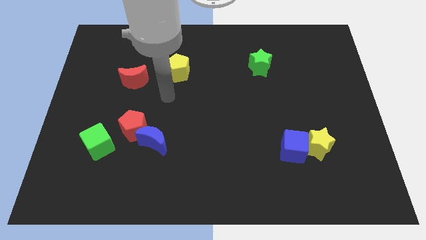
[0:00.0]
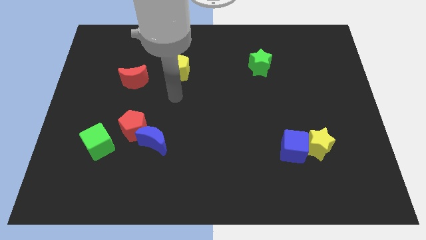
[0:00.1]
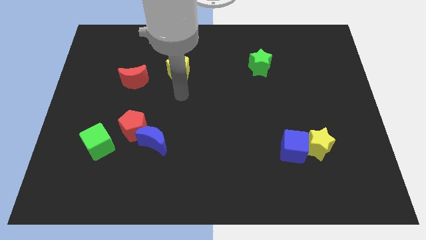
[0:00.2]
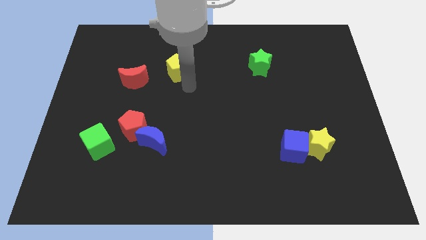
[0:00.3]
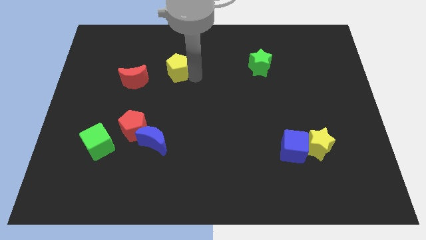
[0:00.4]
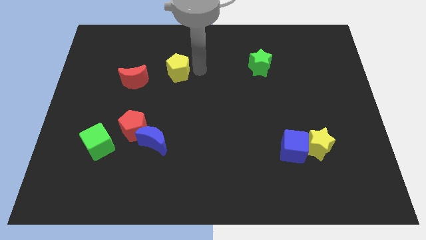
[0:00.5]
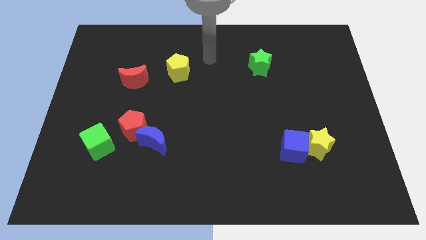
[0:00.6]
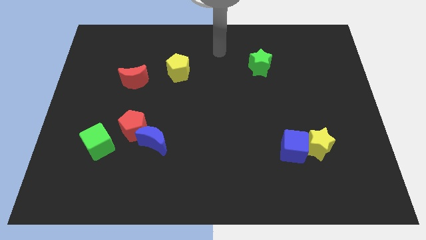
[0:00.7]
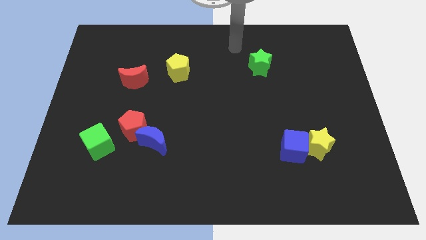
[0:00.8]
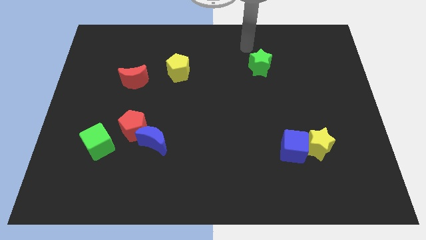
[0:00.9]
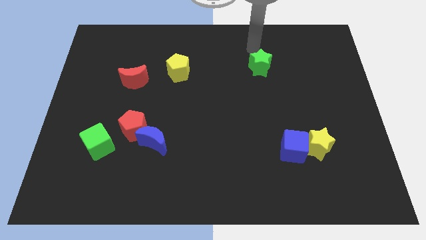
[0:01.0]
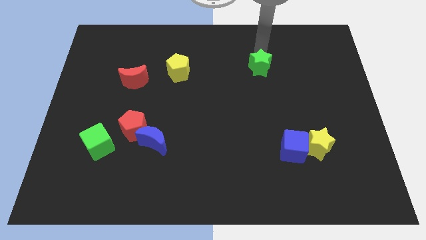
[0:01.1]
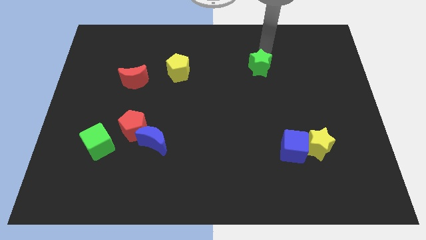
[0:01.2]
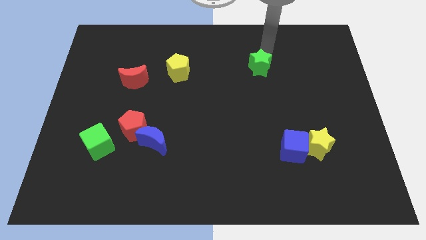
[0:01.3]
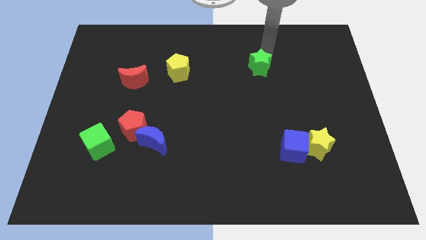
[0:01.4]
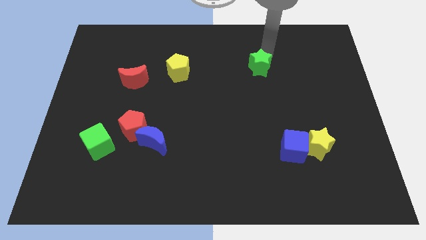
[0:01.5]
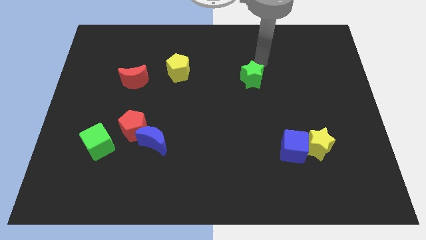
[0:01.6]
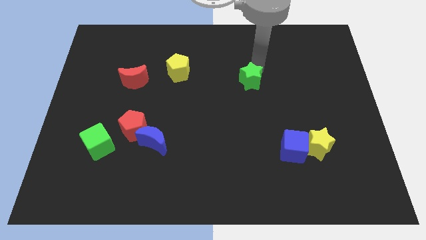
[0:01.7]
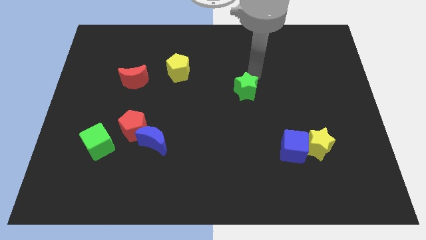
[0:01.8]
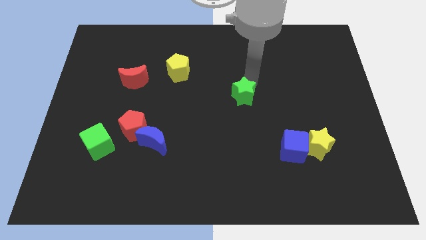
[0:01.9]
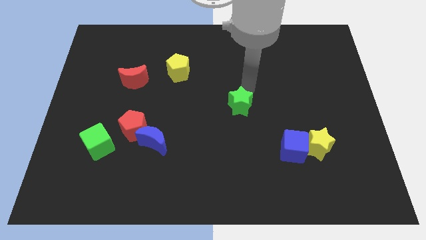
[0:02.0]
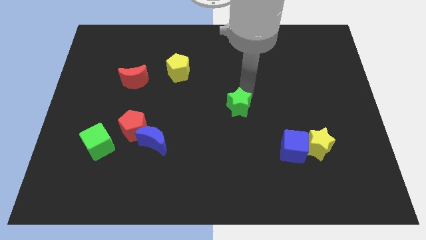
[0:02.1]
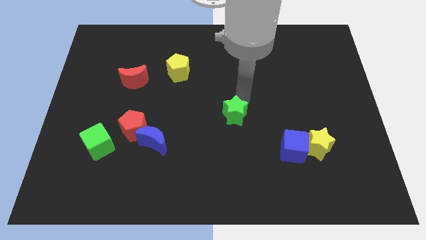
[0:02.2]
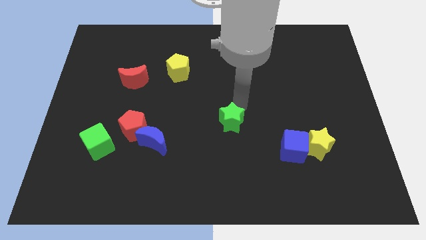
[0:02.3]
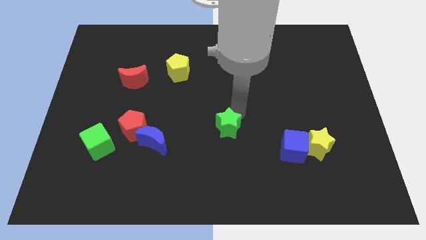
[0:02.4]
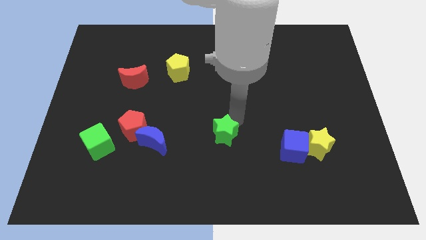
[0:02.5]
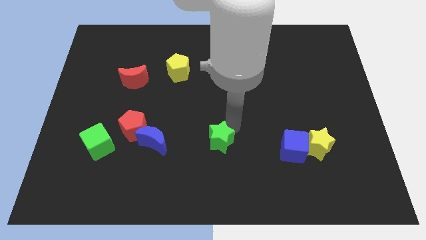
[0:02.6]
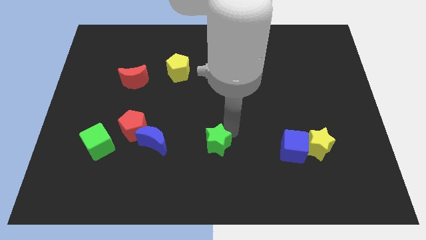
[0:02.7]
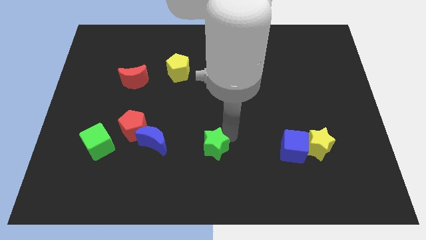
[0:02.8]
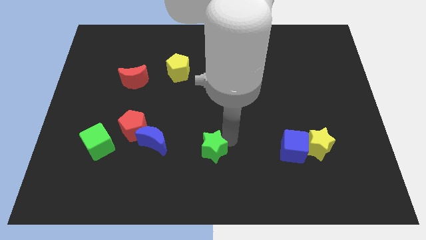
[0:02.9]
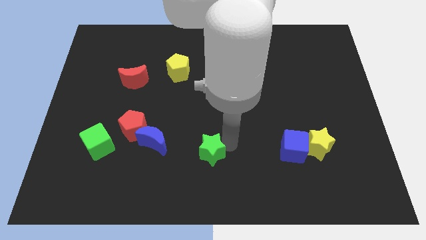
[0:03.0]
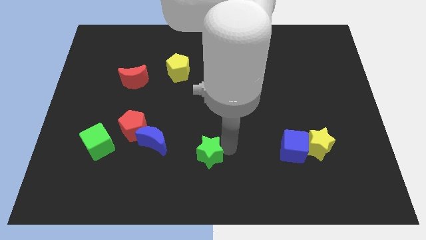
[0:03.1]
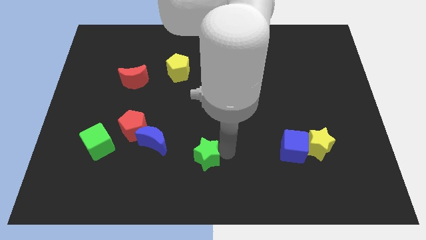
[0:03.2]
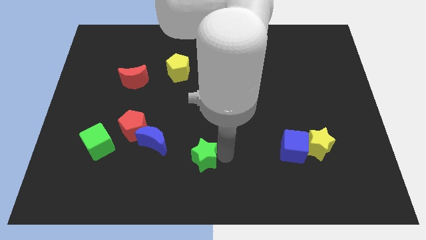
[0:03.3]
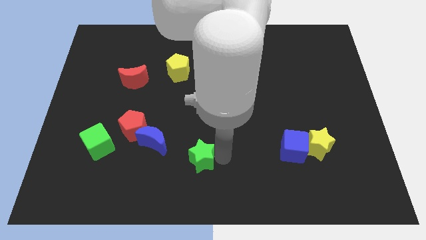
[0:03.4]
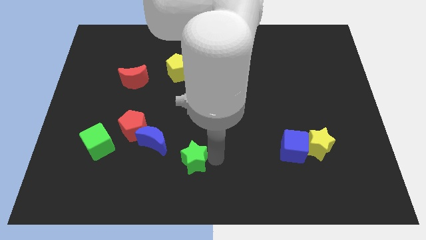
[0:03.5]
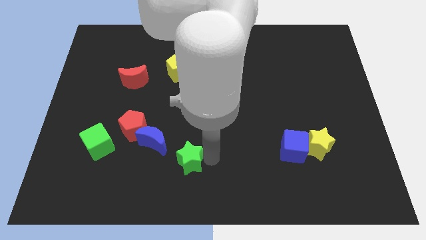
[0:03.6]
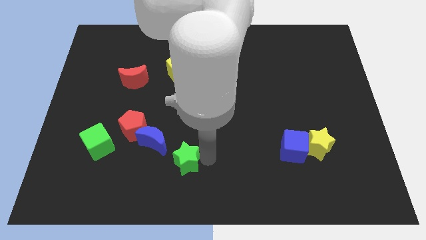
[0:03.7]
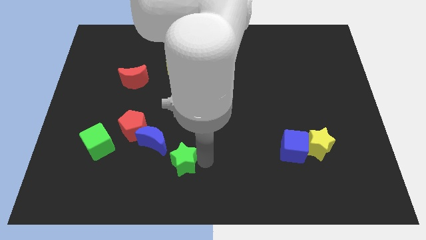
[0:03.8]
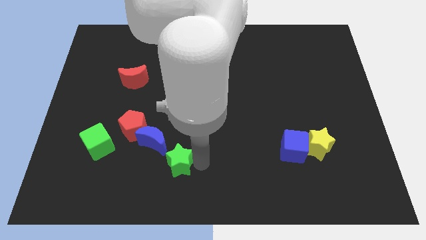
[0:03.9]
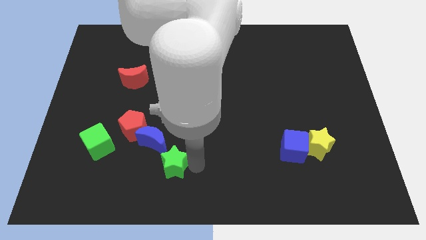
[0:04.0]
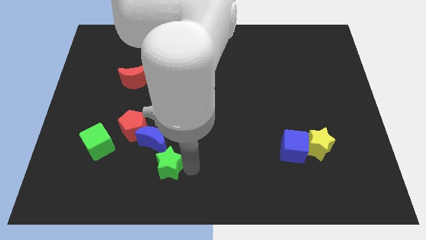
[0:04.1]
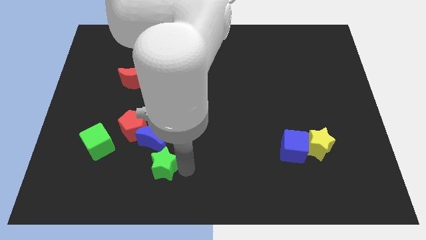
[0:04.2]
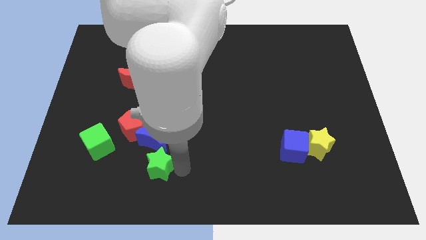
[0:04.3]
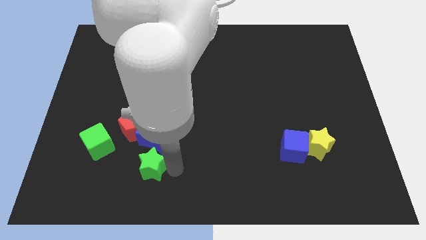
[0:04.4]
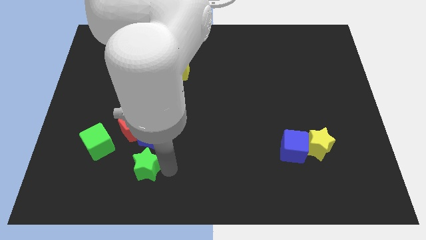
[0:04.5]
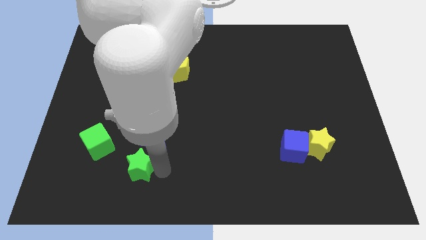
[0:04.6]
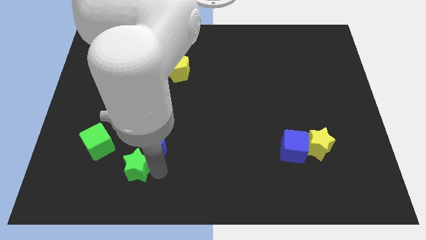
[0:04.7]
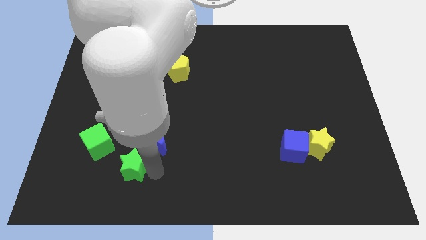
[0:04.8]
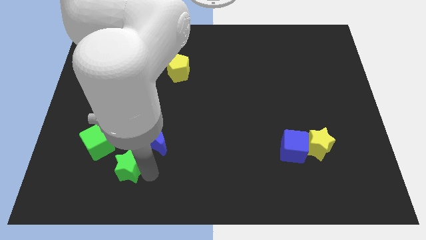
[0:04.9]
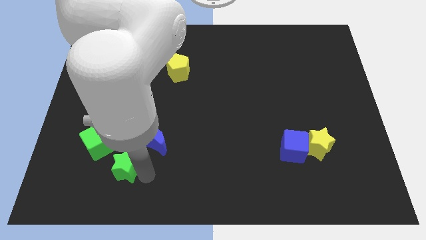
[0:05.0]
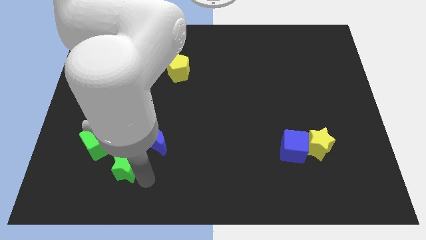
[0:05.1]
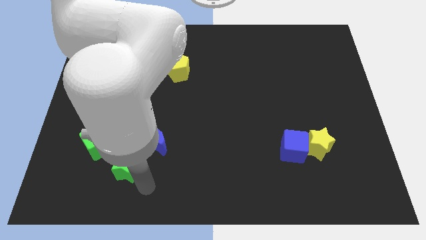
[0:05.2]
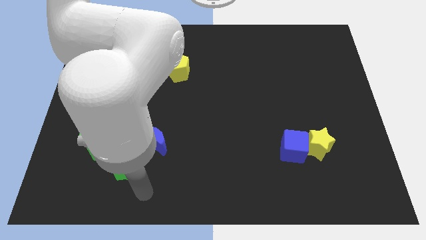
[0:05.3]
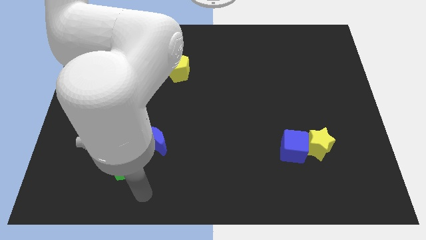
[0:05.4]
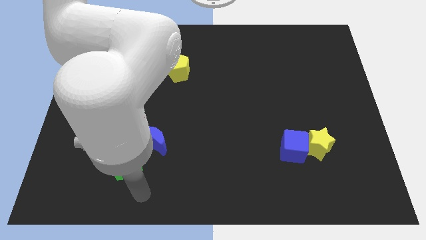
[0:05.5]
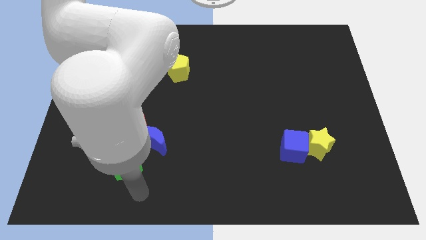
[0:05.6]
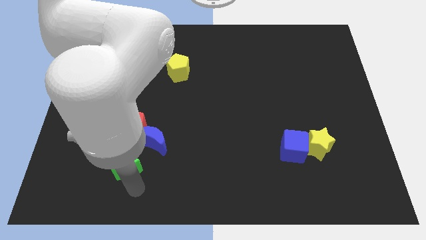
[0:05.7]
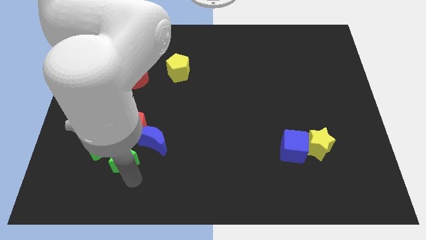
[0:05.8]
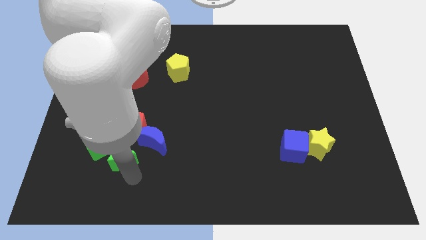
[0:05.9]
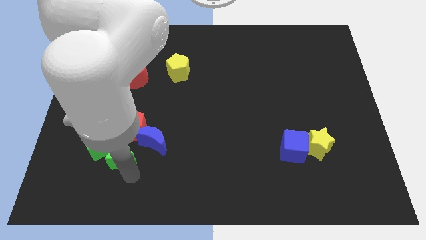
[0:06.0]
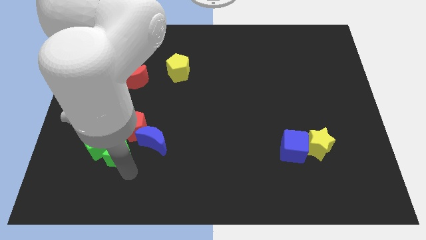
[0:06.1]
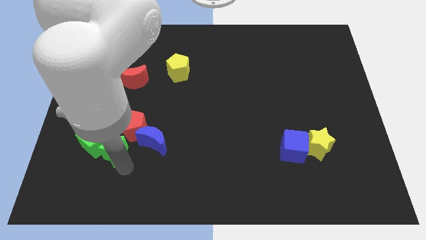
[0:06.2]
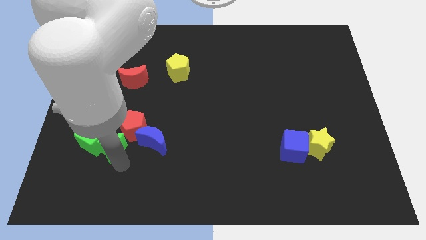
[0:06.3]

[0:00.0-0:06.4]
move the green star close to the green cube

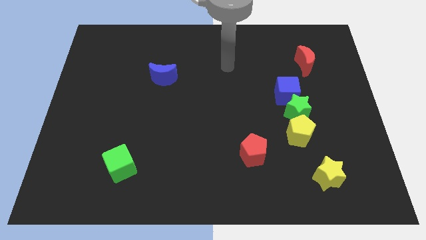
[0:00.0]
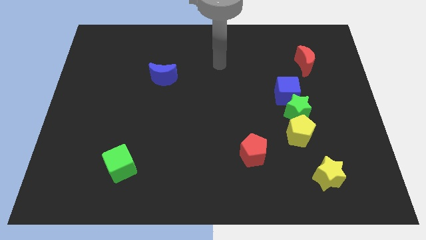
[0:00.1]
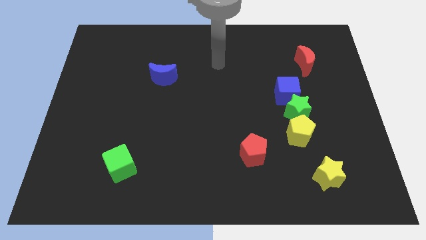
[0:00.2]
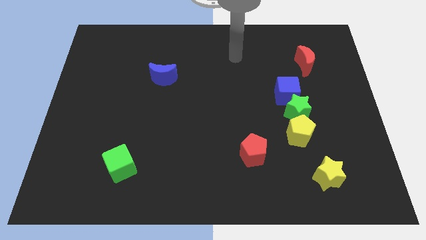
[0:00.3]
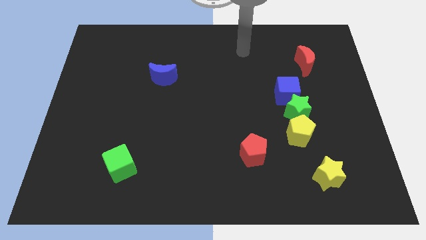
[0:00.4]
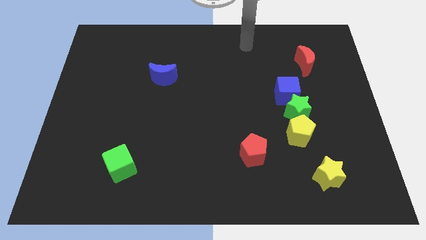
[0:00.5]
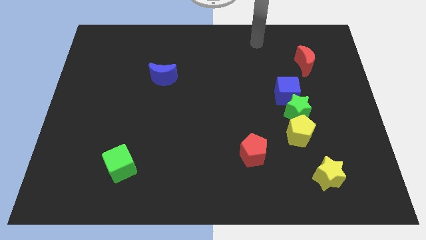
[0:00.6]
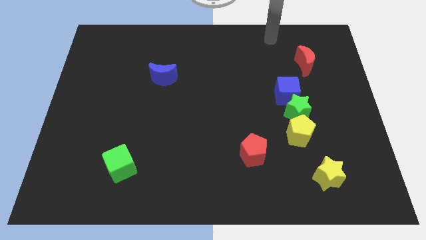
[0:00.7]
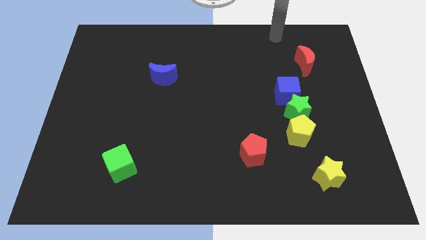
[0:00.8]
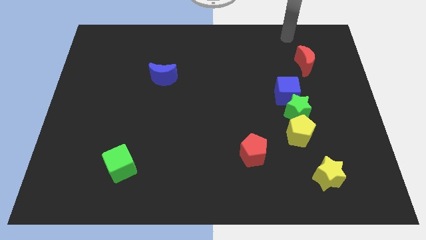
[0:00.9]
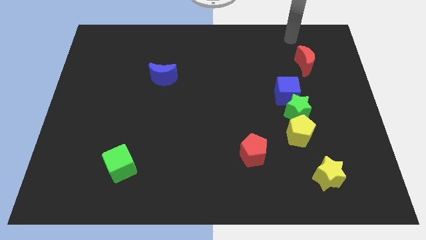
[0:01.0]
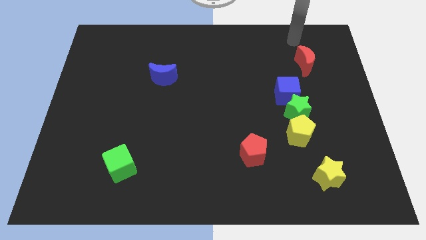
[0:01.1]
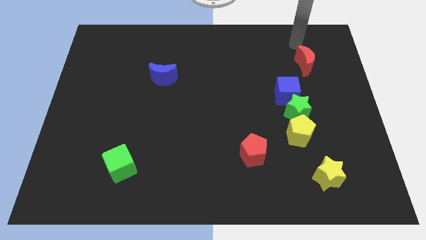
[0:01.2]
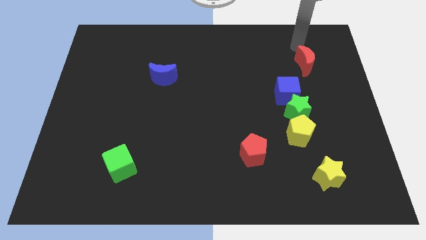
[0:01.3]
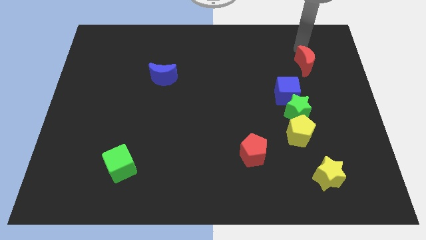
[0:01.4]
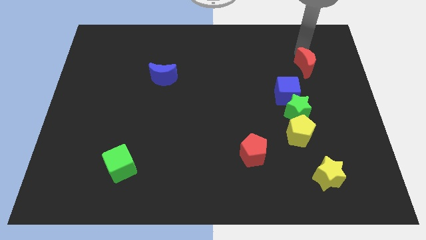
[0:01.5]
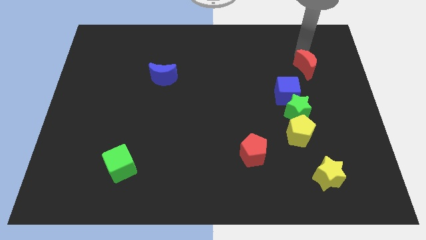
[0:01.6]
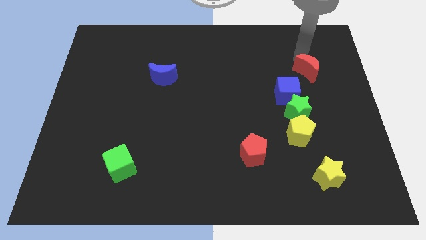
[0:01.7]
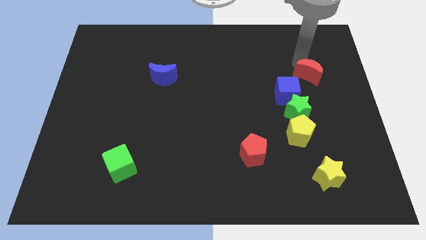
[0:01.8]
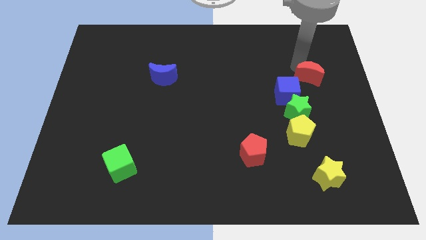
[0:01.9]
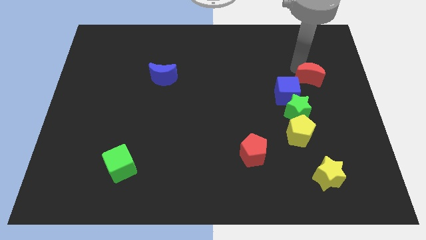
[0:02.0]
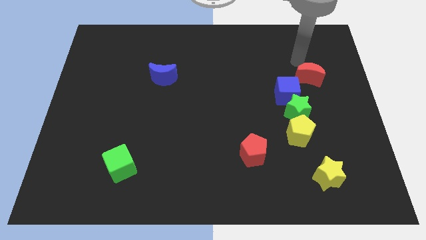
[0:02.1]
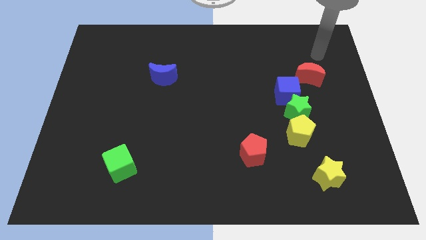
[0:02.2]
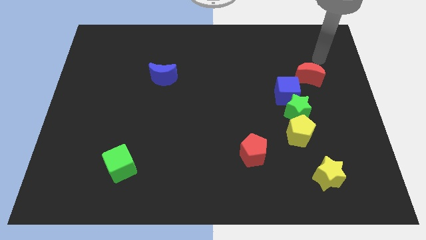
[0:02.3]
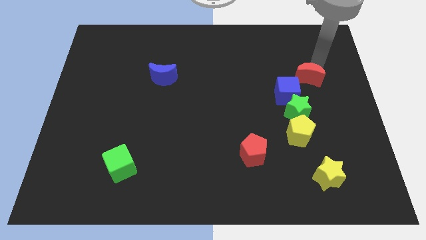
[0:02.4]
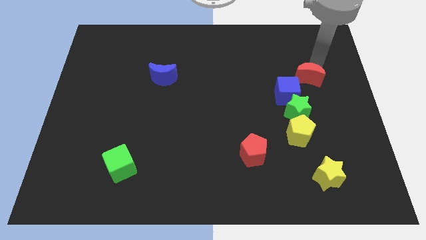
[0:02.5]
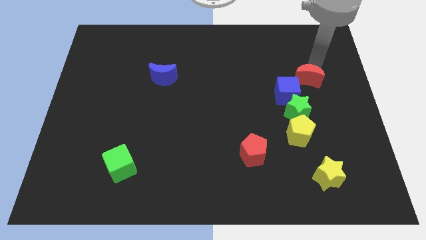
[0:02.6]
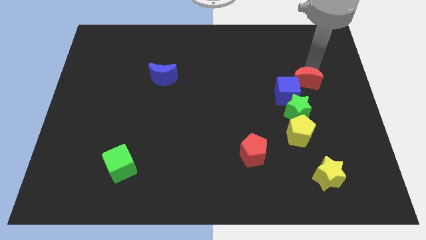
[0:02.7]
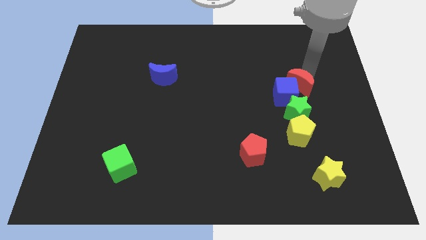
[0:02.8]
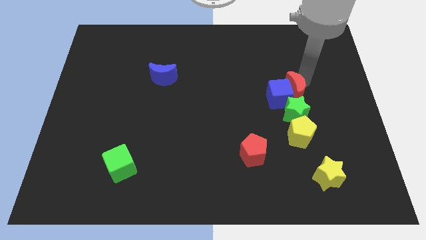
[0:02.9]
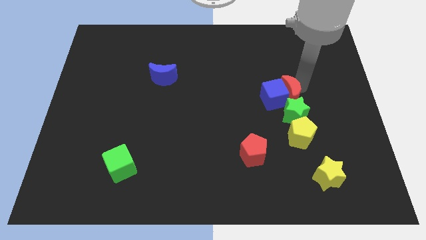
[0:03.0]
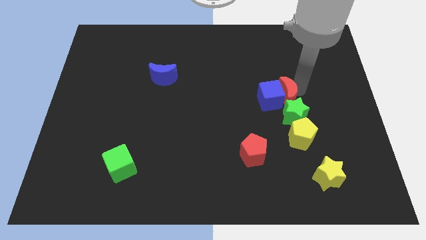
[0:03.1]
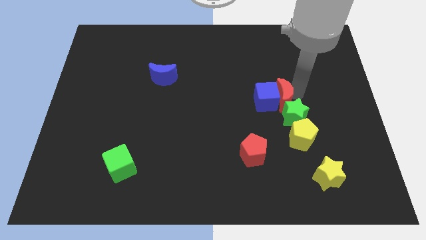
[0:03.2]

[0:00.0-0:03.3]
push the red moon towards the green star
